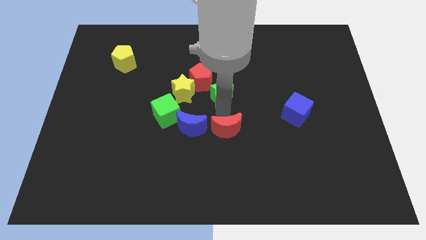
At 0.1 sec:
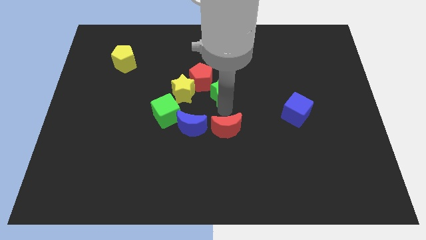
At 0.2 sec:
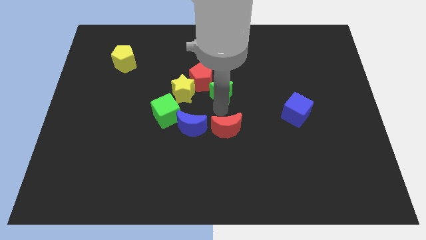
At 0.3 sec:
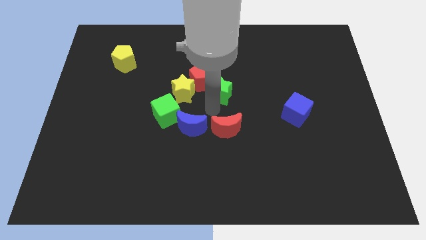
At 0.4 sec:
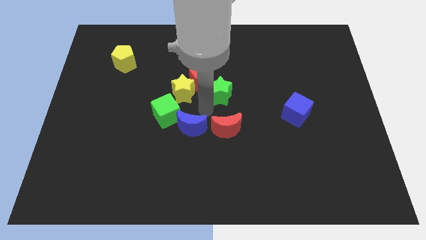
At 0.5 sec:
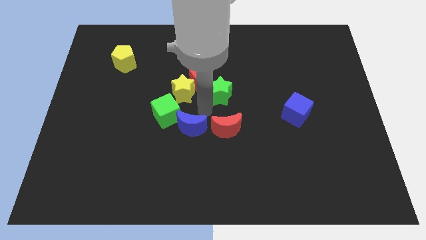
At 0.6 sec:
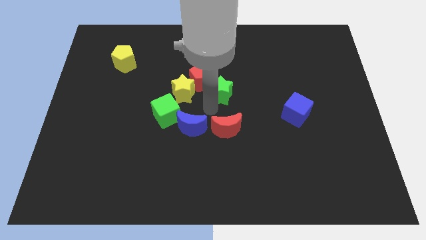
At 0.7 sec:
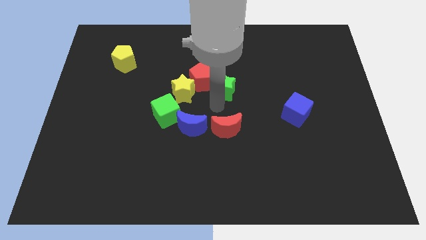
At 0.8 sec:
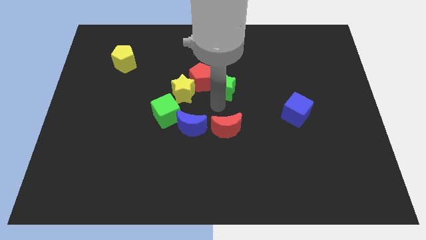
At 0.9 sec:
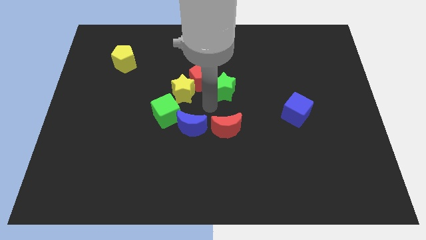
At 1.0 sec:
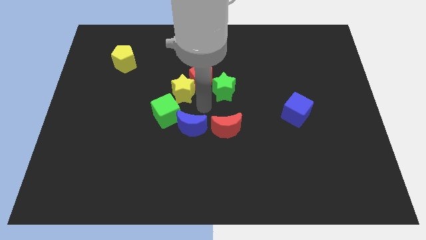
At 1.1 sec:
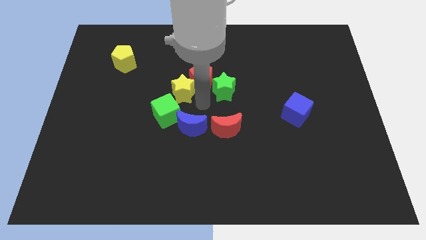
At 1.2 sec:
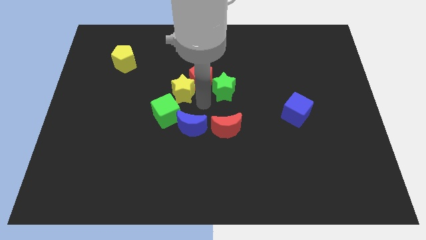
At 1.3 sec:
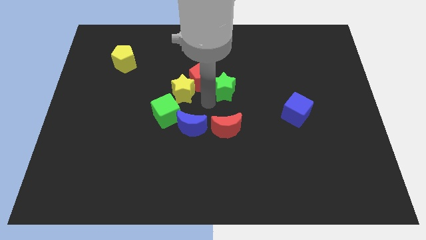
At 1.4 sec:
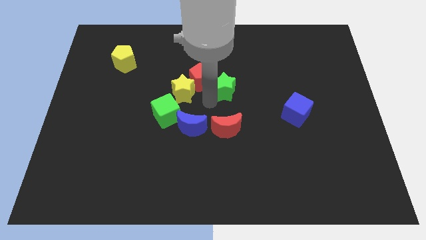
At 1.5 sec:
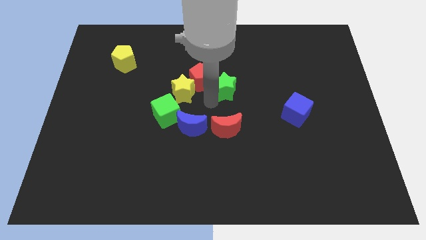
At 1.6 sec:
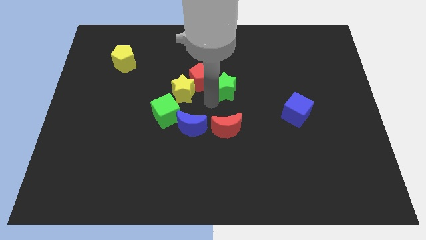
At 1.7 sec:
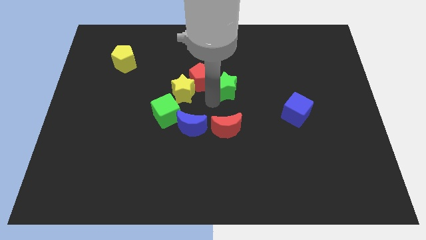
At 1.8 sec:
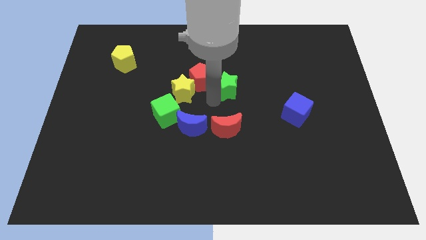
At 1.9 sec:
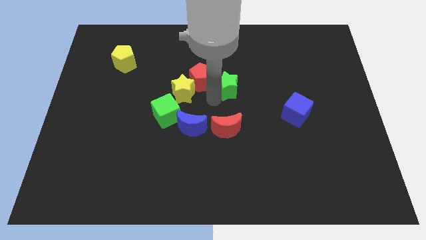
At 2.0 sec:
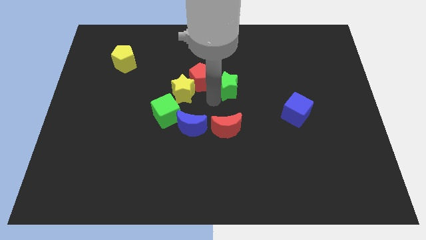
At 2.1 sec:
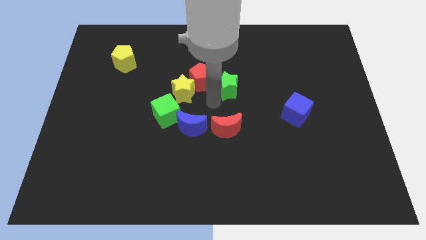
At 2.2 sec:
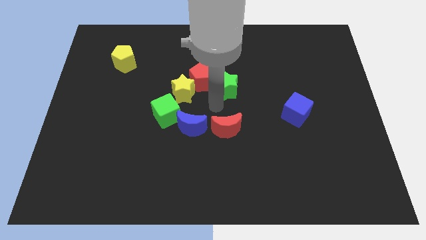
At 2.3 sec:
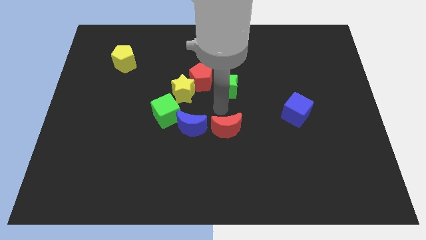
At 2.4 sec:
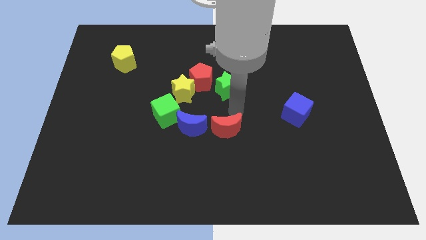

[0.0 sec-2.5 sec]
push green star slightly upwards

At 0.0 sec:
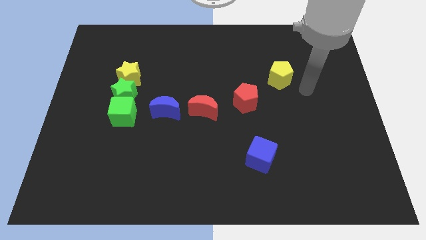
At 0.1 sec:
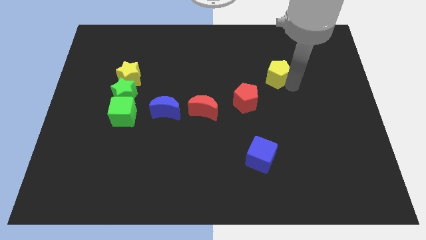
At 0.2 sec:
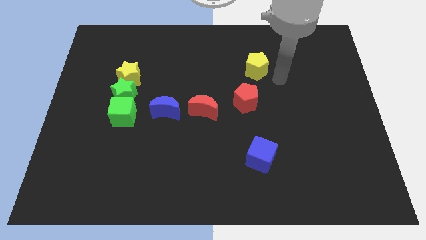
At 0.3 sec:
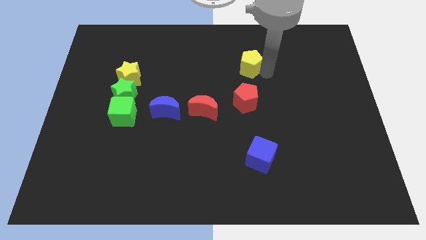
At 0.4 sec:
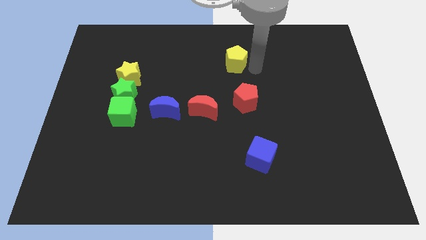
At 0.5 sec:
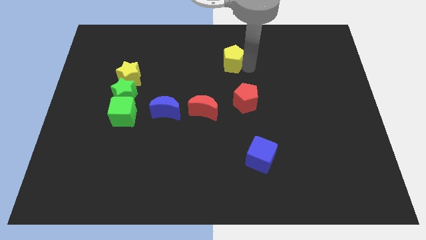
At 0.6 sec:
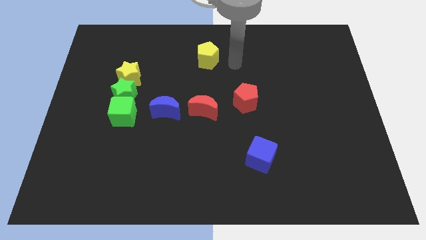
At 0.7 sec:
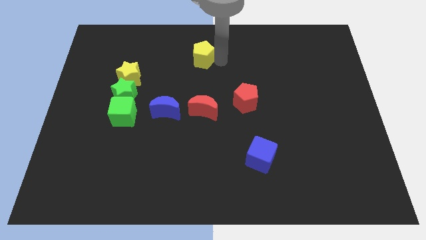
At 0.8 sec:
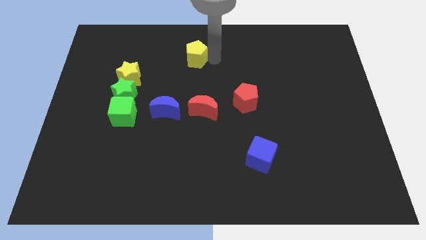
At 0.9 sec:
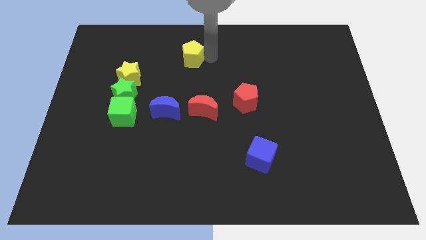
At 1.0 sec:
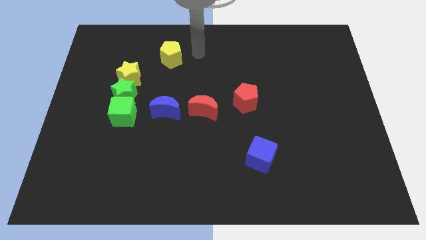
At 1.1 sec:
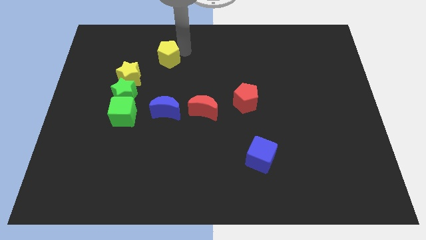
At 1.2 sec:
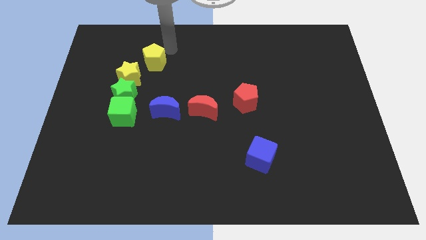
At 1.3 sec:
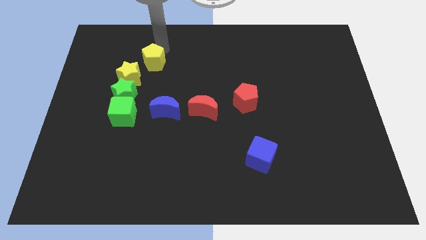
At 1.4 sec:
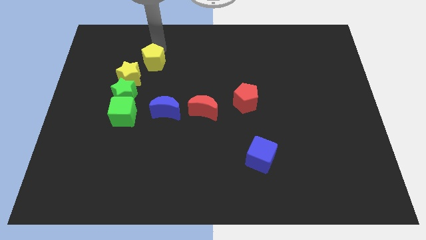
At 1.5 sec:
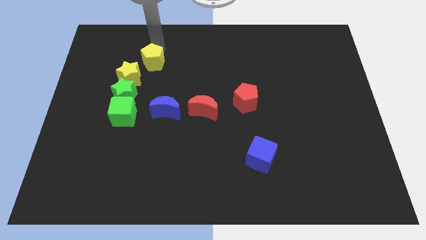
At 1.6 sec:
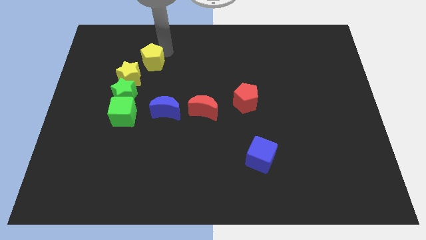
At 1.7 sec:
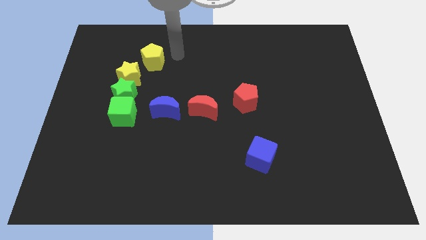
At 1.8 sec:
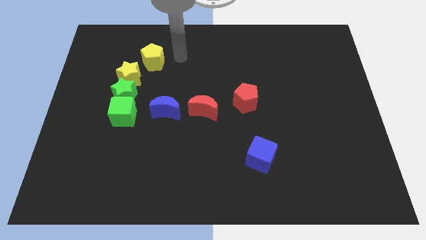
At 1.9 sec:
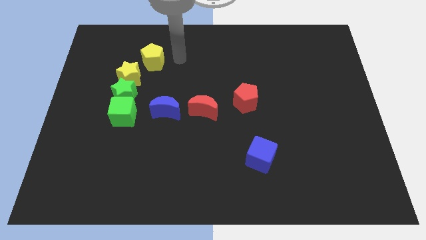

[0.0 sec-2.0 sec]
push the yellow pentagon towards the yellow star

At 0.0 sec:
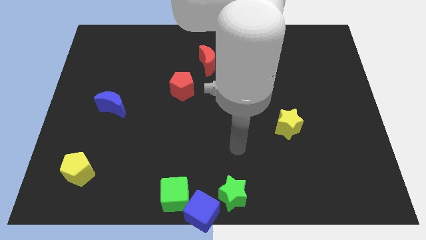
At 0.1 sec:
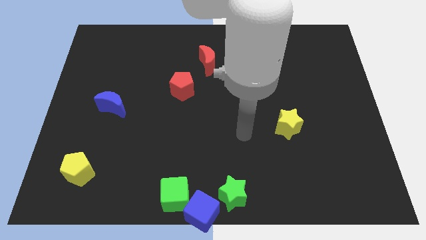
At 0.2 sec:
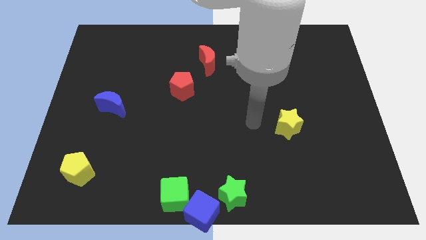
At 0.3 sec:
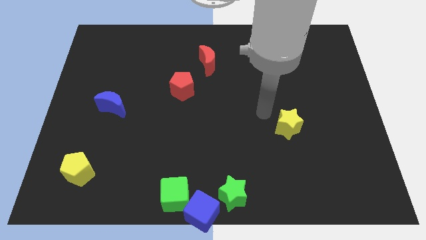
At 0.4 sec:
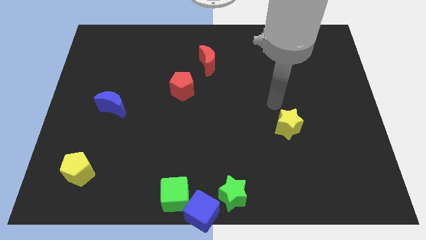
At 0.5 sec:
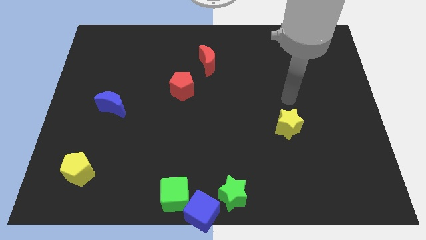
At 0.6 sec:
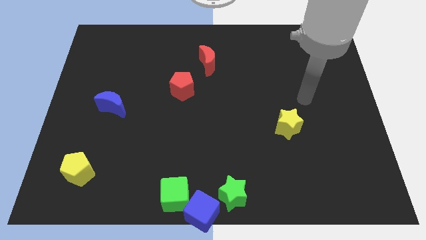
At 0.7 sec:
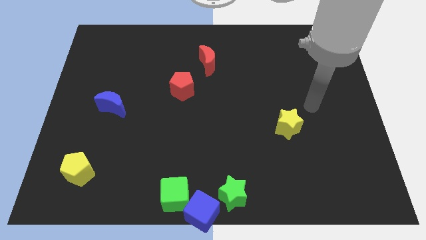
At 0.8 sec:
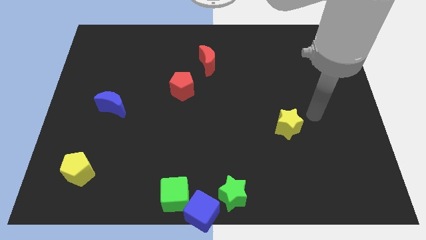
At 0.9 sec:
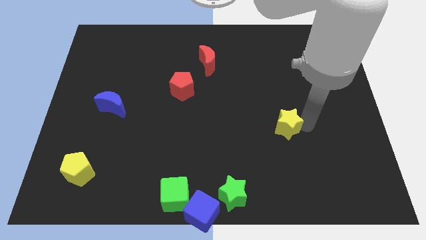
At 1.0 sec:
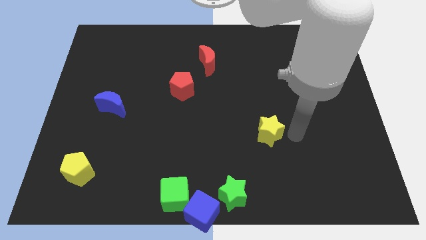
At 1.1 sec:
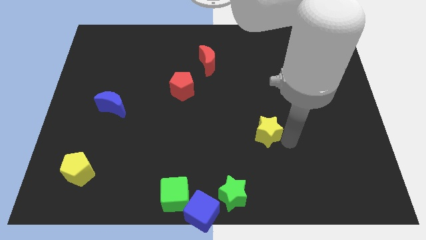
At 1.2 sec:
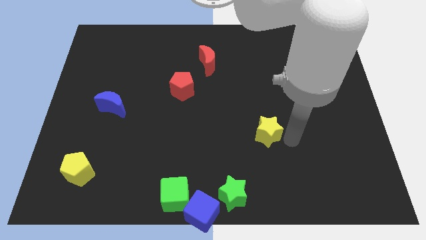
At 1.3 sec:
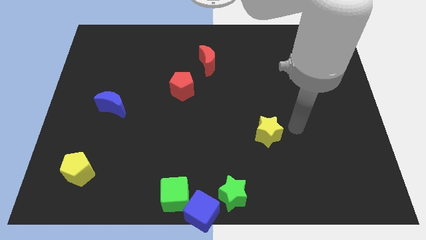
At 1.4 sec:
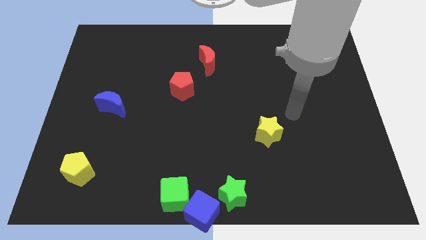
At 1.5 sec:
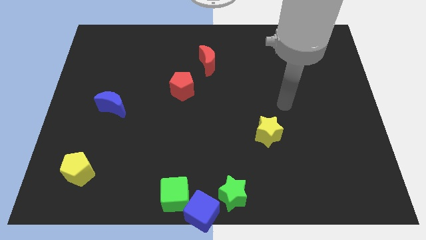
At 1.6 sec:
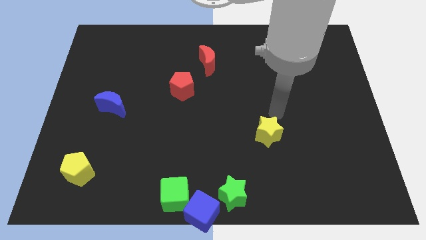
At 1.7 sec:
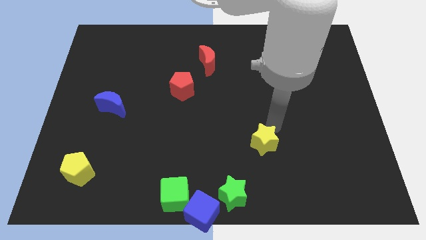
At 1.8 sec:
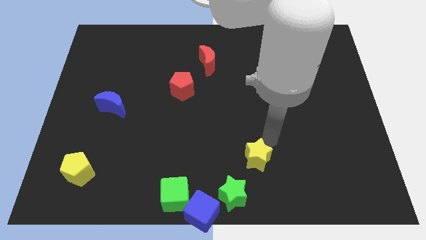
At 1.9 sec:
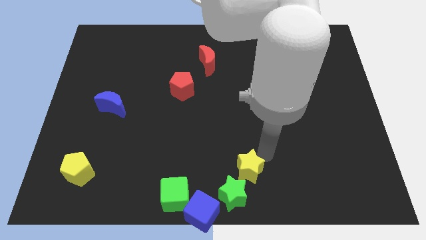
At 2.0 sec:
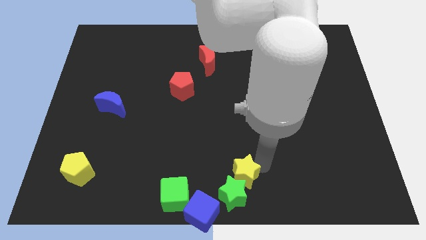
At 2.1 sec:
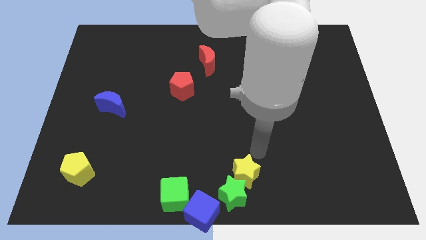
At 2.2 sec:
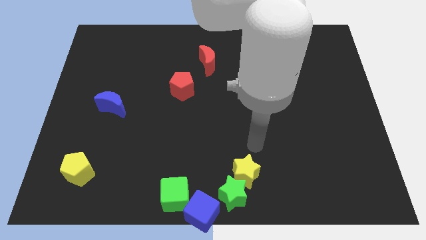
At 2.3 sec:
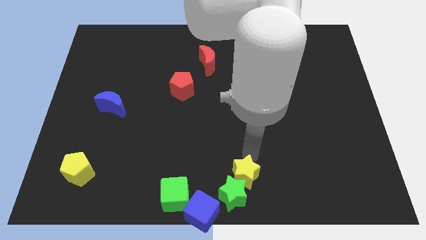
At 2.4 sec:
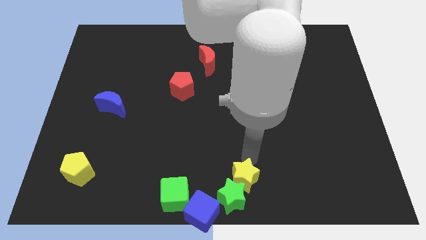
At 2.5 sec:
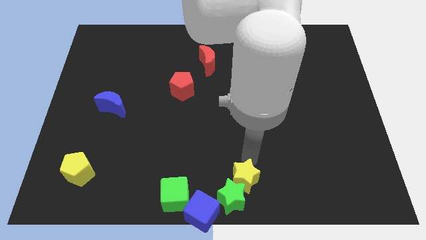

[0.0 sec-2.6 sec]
push the yellow star into green star

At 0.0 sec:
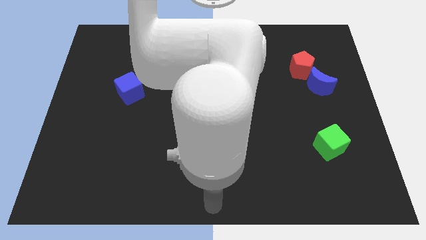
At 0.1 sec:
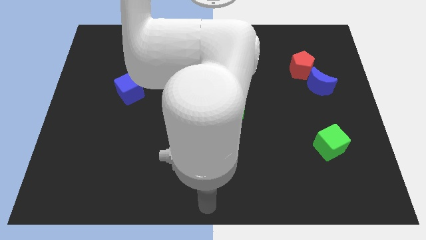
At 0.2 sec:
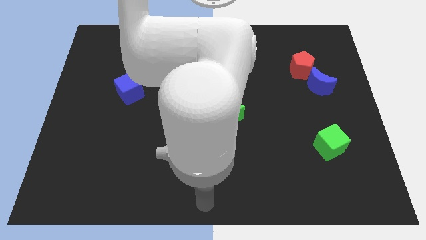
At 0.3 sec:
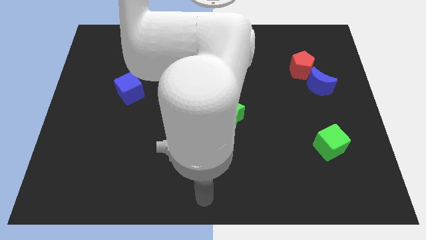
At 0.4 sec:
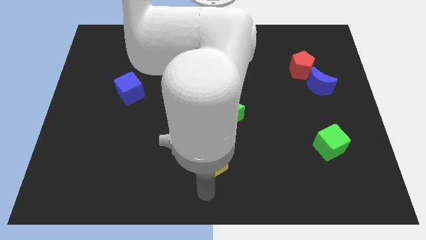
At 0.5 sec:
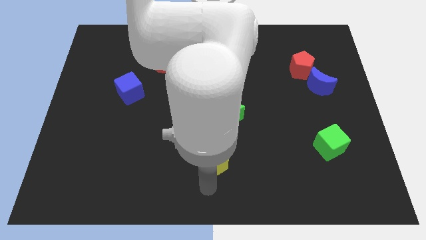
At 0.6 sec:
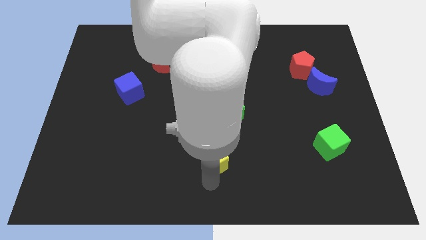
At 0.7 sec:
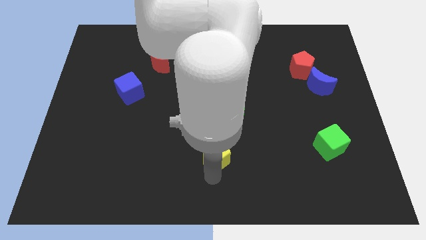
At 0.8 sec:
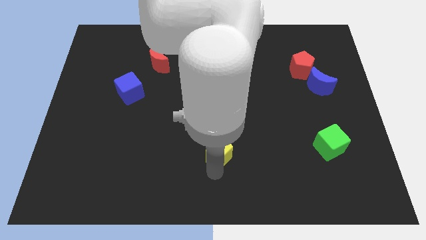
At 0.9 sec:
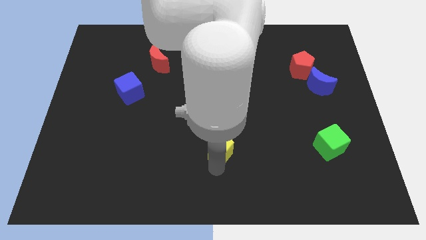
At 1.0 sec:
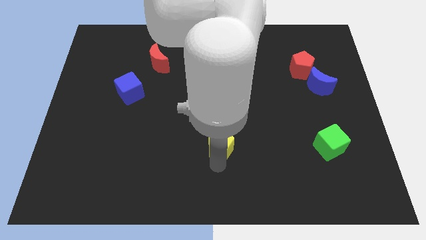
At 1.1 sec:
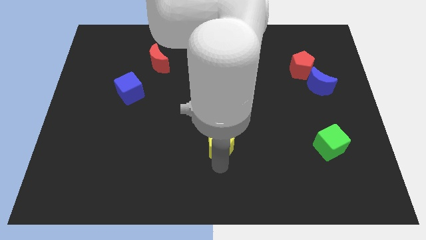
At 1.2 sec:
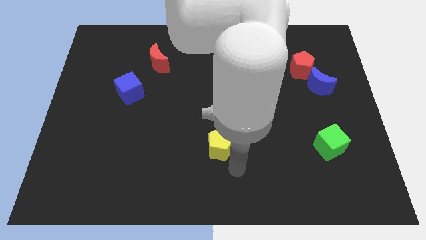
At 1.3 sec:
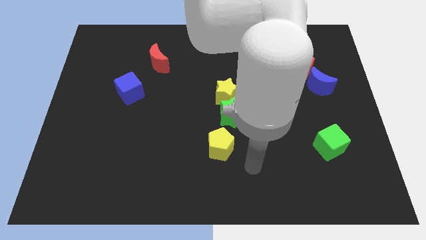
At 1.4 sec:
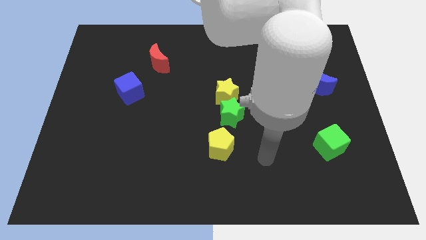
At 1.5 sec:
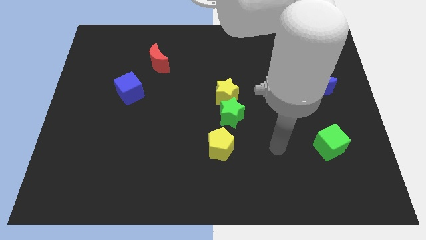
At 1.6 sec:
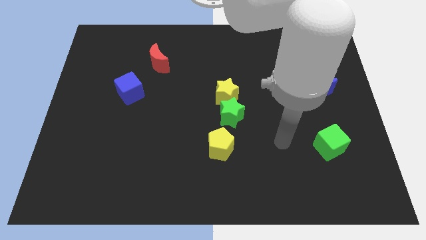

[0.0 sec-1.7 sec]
move the yellow pentagon close to the green star
